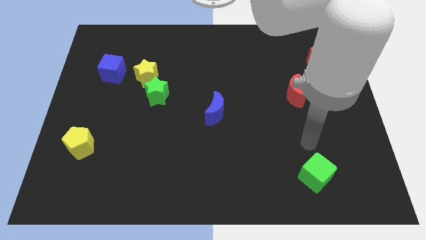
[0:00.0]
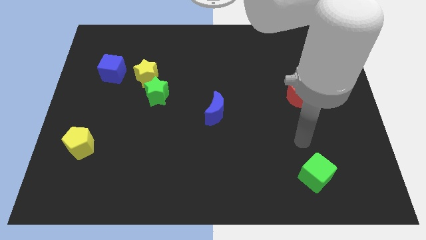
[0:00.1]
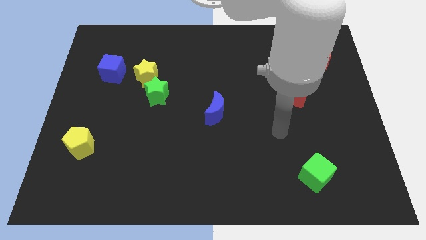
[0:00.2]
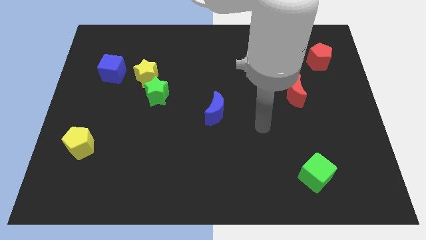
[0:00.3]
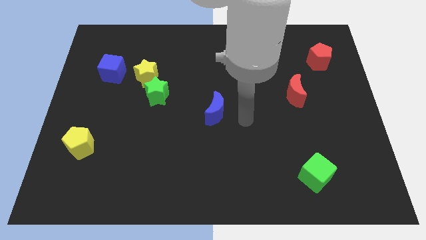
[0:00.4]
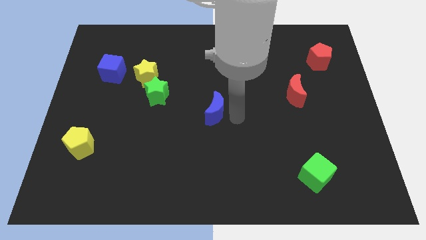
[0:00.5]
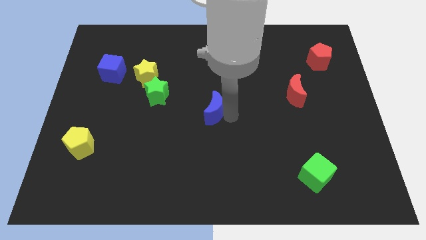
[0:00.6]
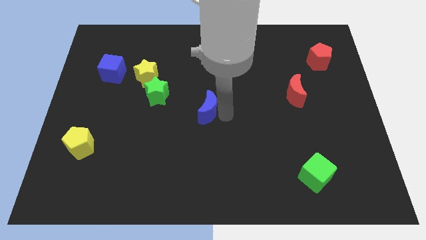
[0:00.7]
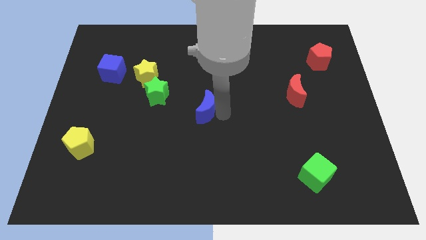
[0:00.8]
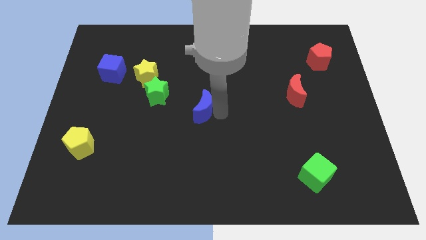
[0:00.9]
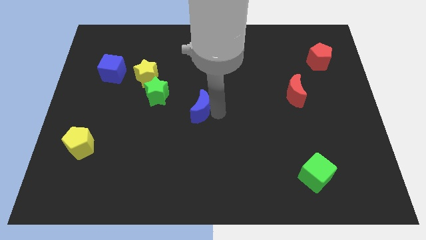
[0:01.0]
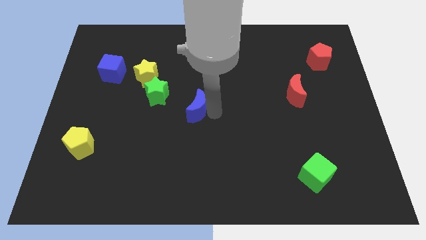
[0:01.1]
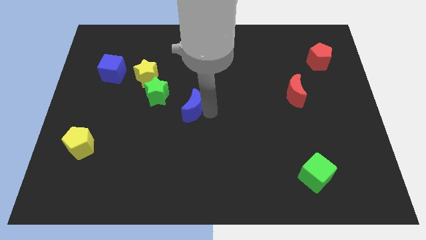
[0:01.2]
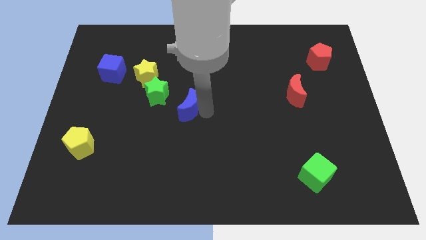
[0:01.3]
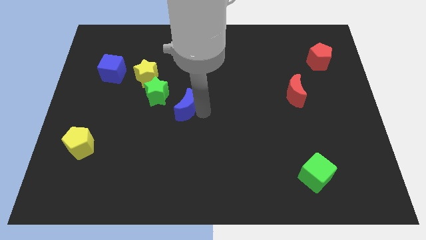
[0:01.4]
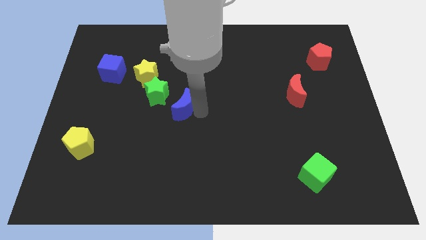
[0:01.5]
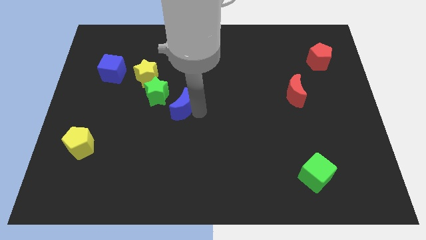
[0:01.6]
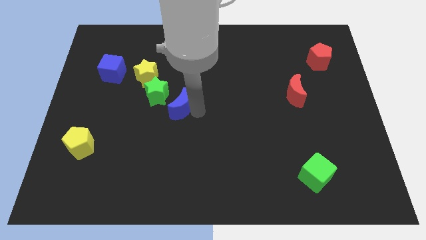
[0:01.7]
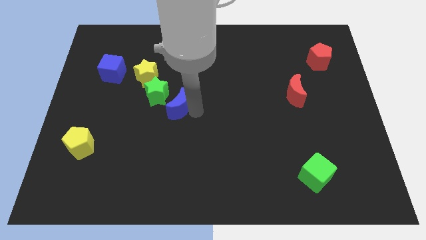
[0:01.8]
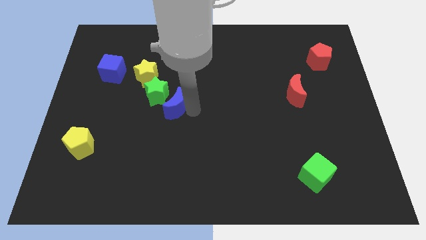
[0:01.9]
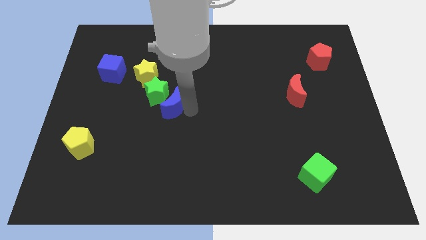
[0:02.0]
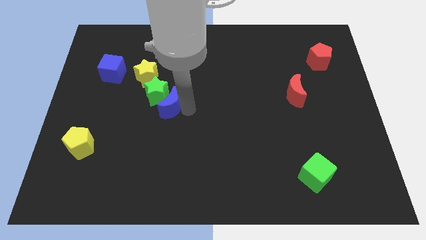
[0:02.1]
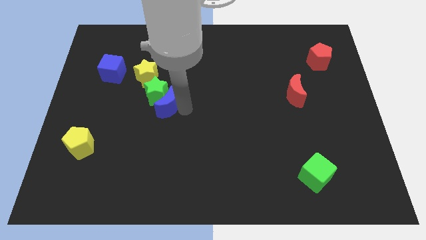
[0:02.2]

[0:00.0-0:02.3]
push the blue moon next to the green star

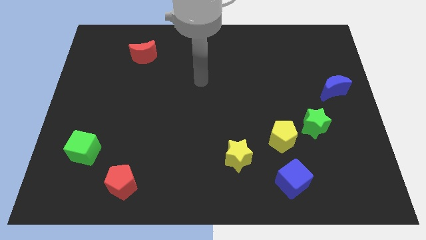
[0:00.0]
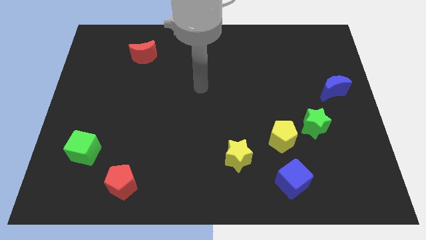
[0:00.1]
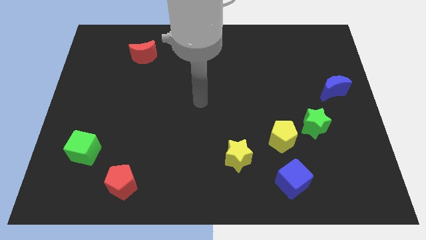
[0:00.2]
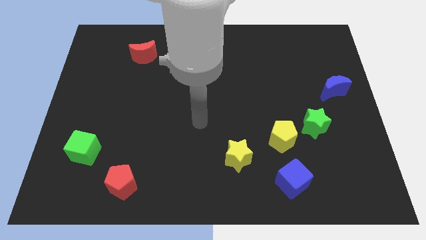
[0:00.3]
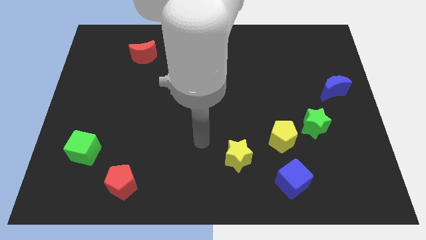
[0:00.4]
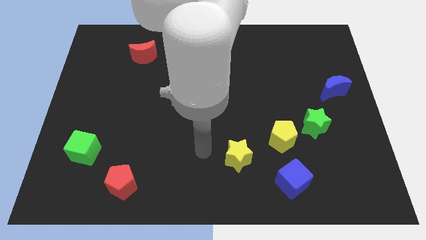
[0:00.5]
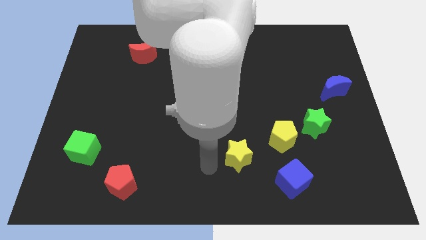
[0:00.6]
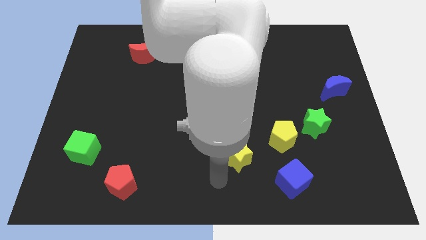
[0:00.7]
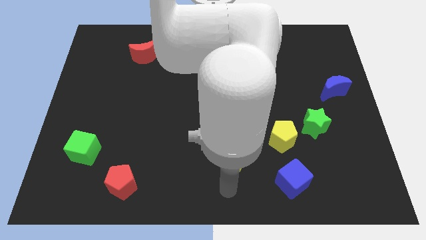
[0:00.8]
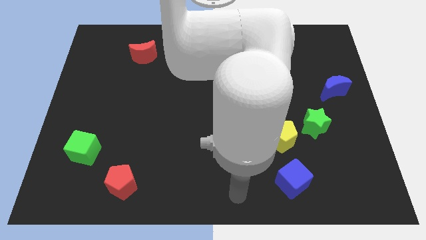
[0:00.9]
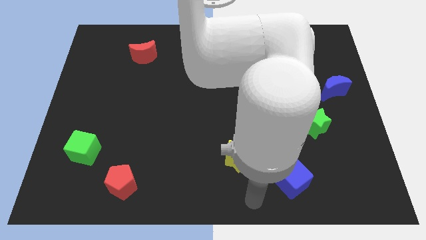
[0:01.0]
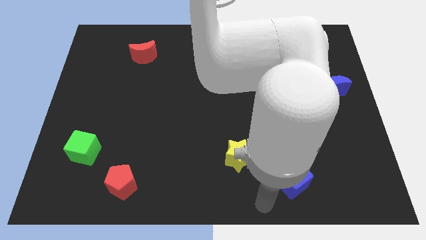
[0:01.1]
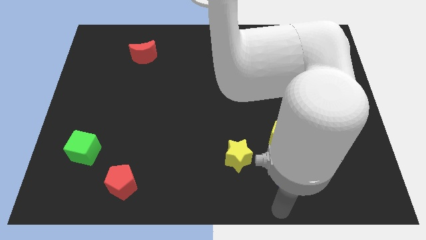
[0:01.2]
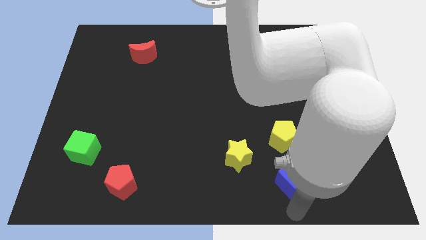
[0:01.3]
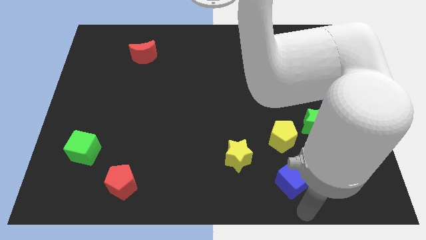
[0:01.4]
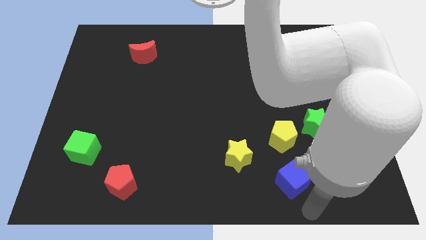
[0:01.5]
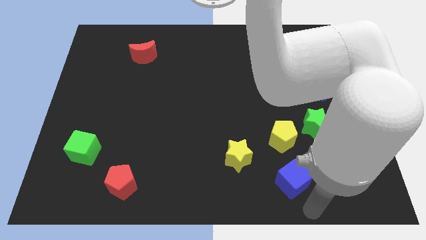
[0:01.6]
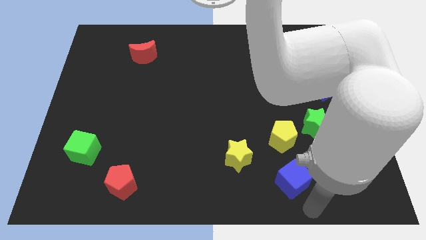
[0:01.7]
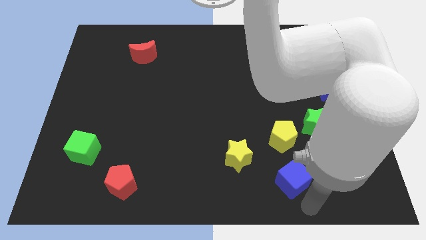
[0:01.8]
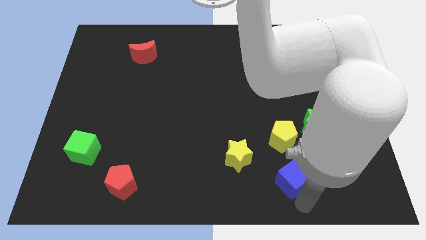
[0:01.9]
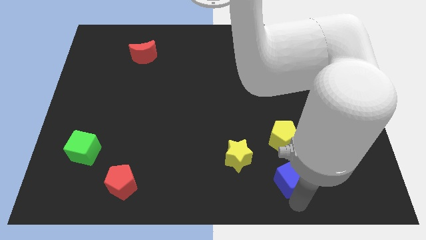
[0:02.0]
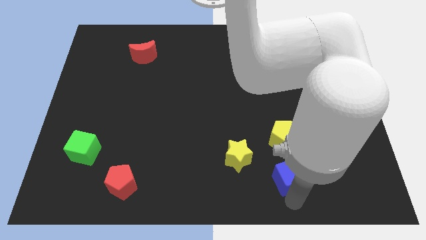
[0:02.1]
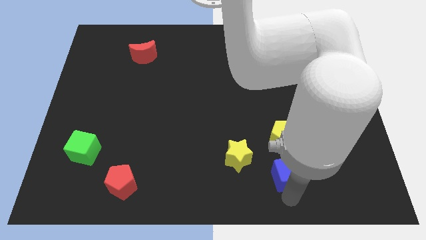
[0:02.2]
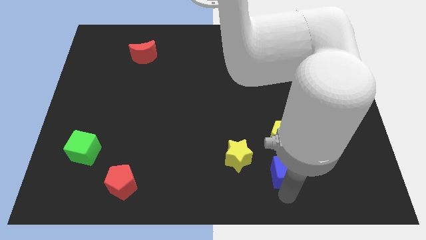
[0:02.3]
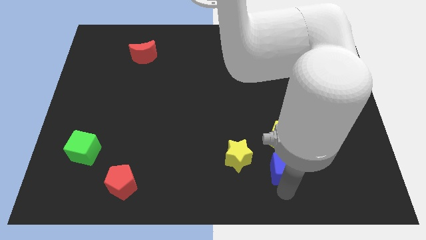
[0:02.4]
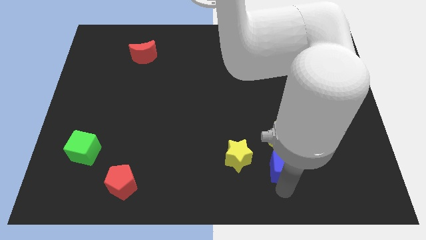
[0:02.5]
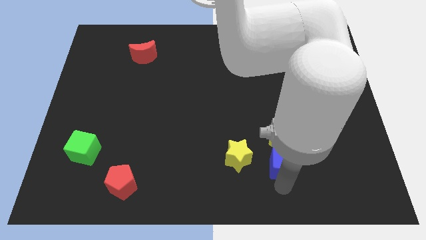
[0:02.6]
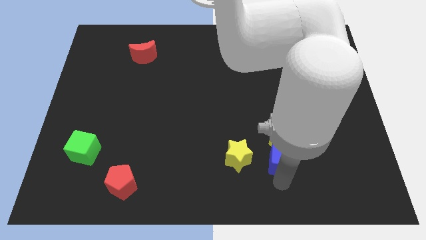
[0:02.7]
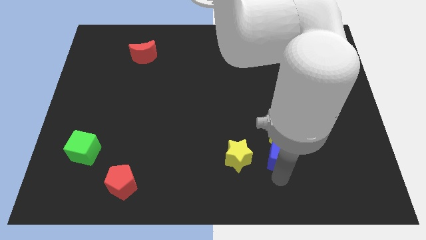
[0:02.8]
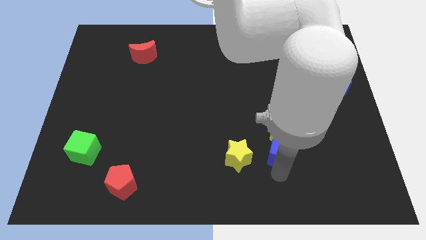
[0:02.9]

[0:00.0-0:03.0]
push the blue cube to the yellow pentagon

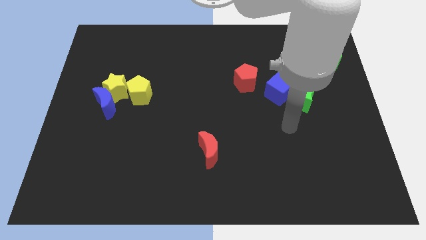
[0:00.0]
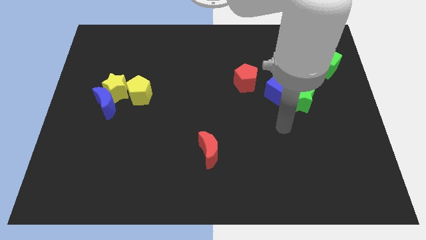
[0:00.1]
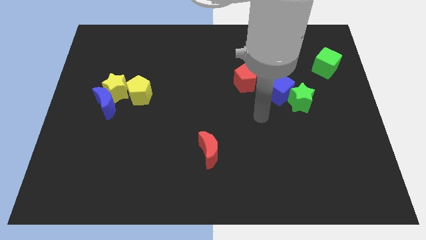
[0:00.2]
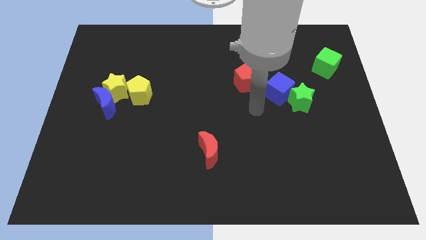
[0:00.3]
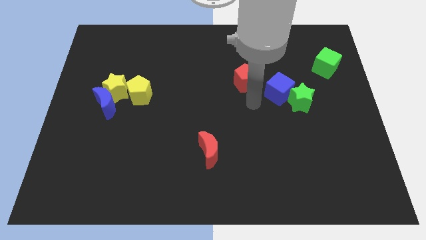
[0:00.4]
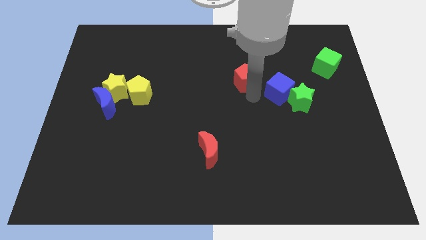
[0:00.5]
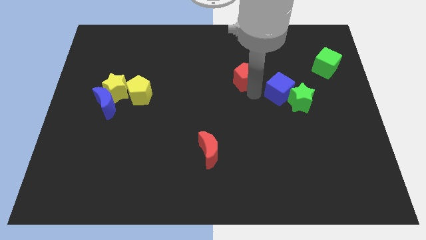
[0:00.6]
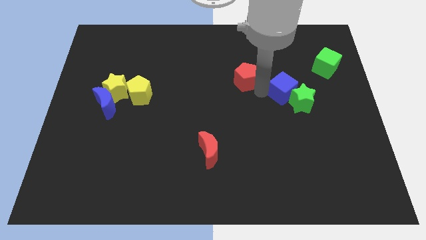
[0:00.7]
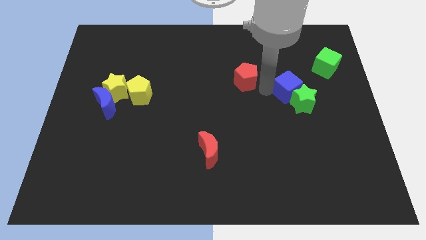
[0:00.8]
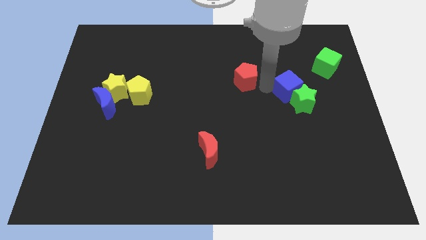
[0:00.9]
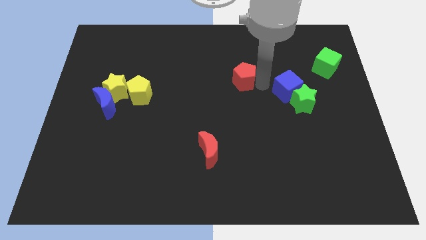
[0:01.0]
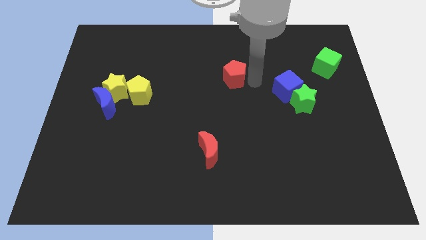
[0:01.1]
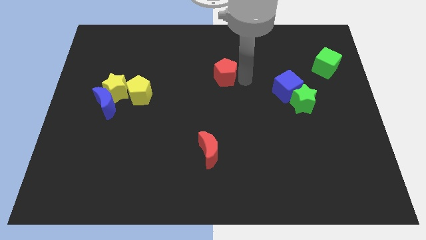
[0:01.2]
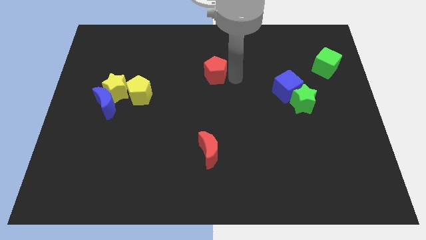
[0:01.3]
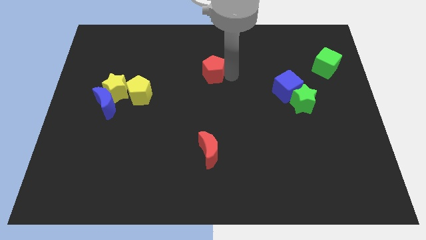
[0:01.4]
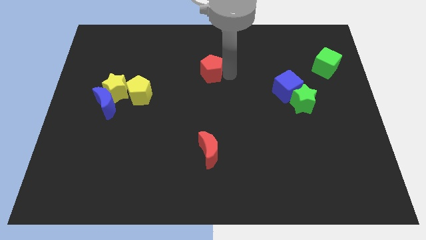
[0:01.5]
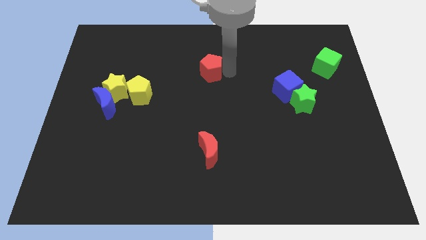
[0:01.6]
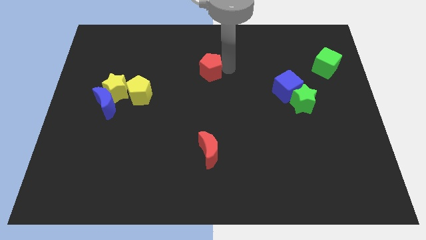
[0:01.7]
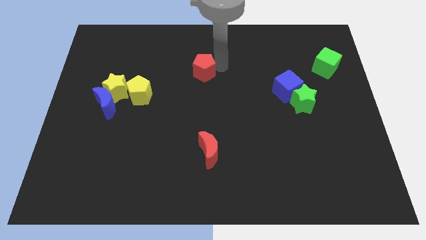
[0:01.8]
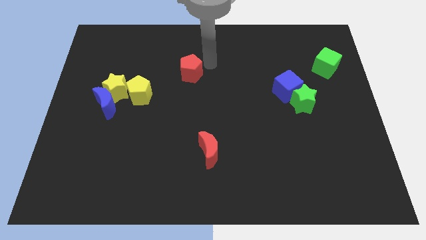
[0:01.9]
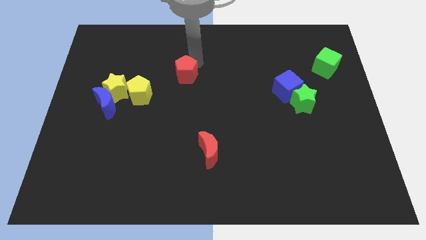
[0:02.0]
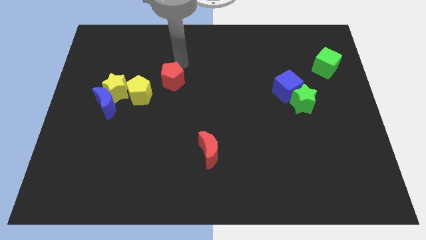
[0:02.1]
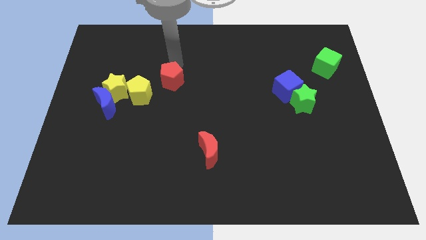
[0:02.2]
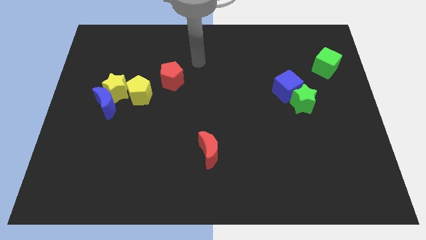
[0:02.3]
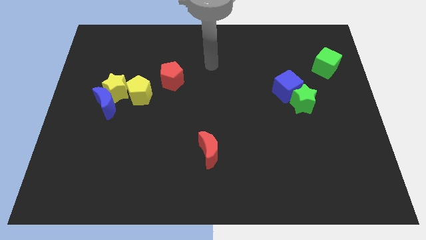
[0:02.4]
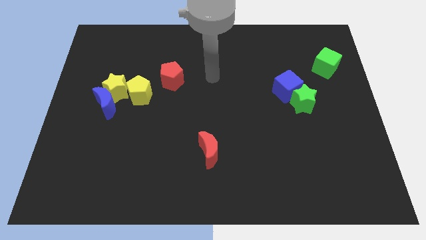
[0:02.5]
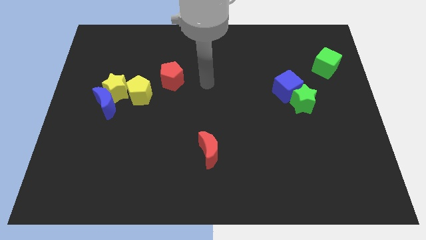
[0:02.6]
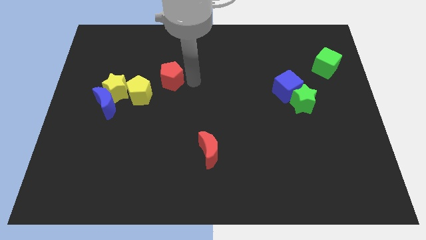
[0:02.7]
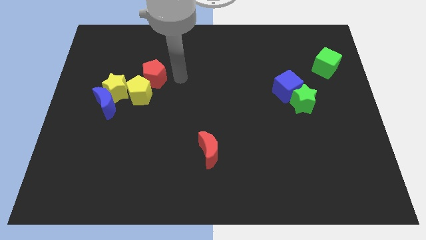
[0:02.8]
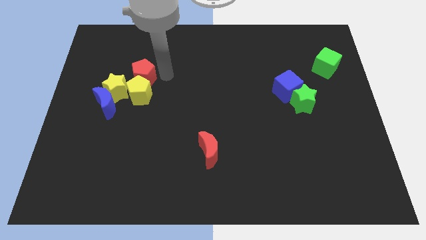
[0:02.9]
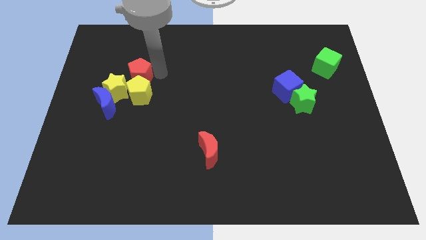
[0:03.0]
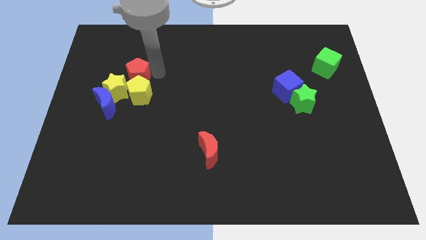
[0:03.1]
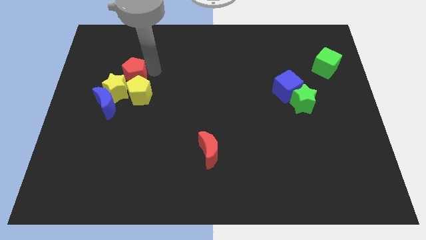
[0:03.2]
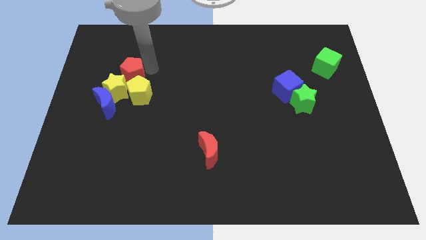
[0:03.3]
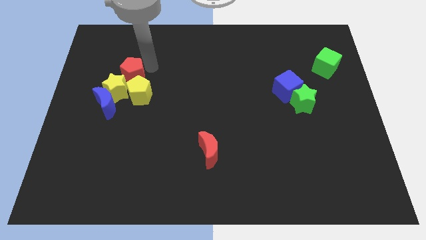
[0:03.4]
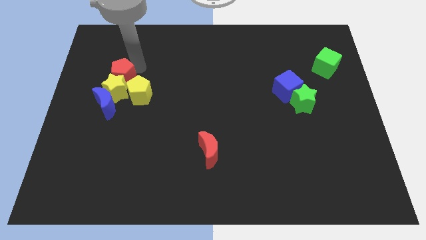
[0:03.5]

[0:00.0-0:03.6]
push the red pentagon close to the yellow star
